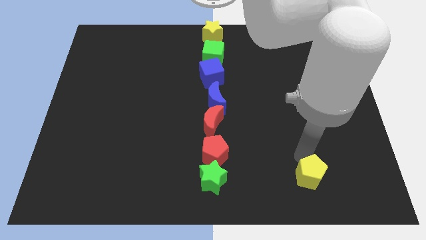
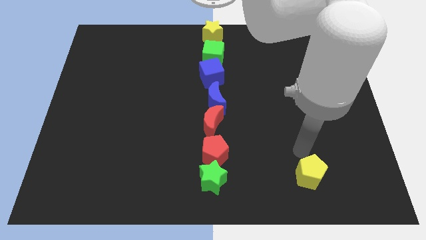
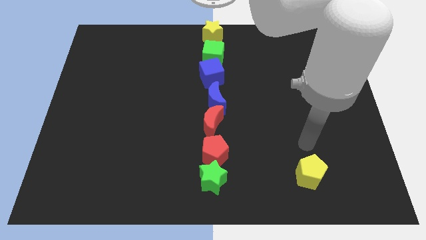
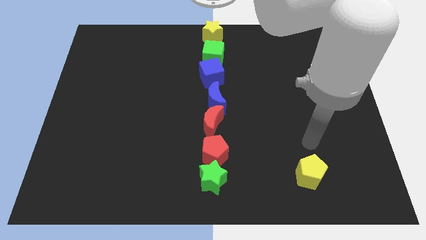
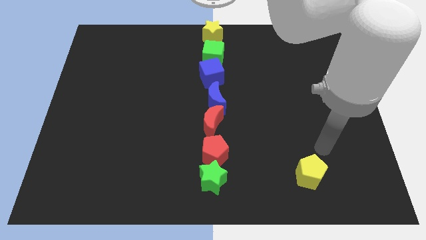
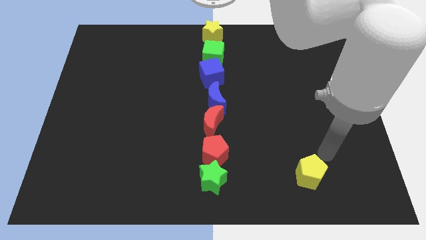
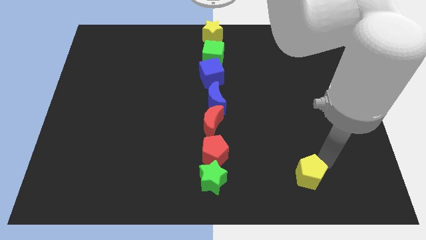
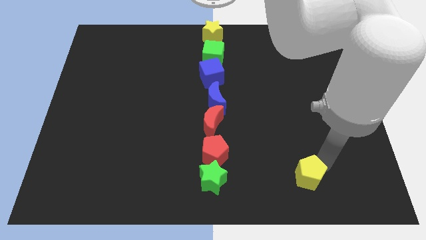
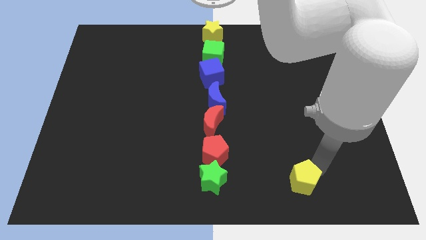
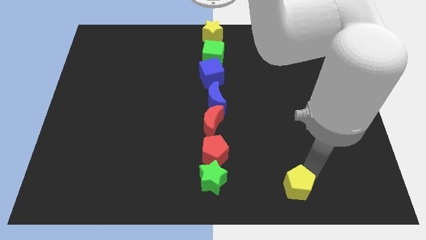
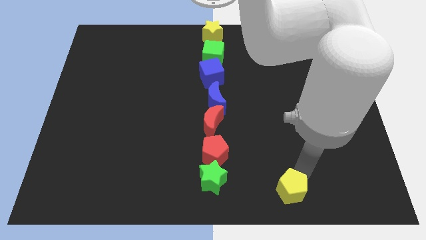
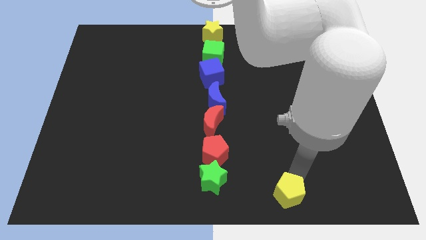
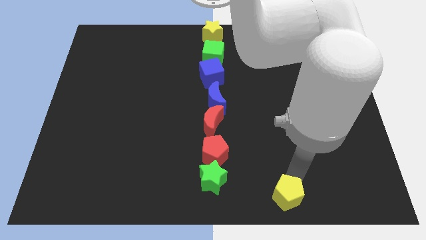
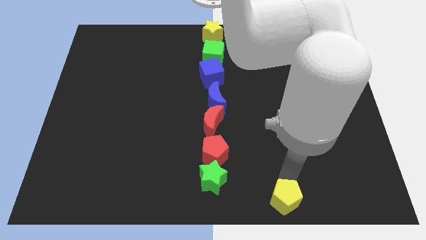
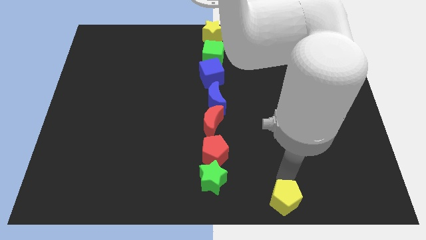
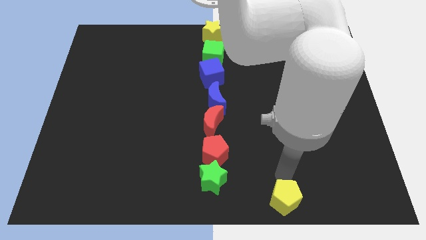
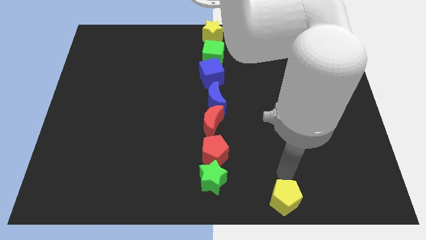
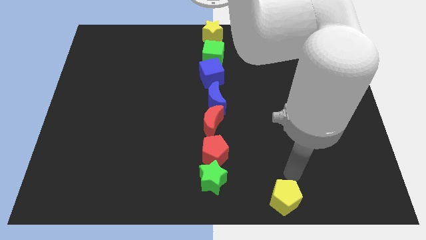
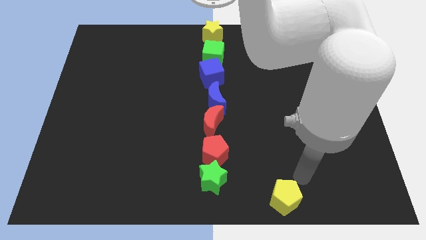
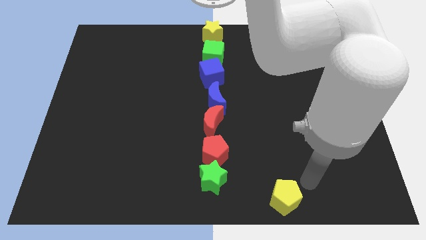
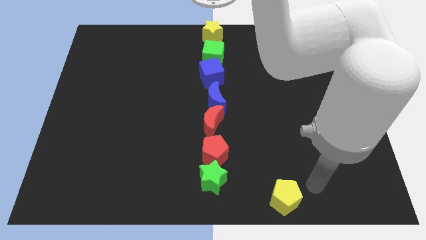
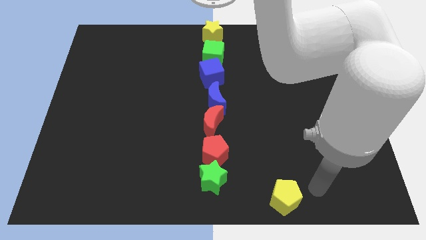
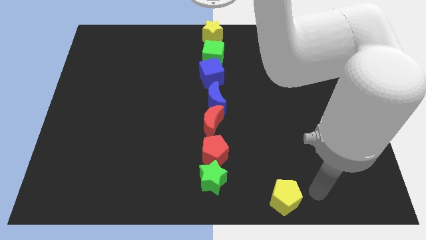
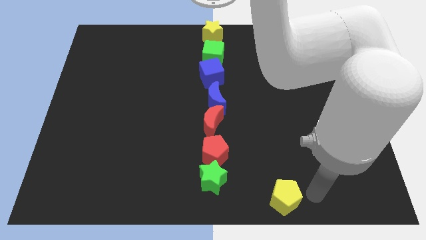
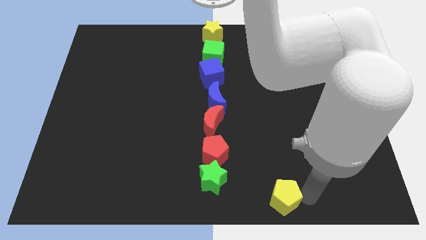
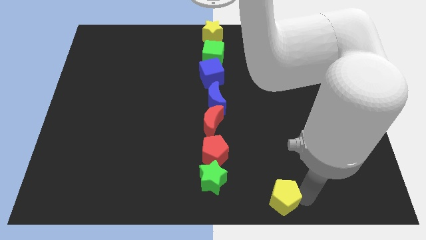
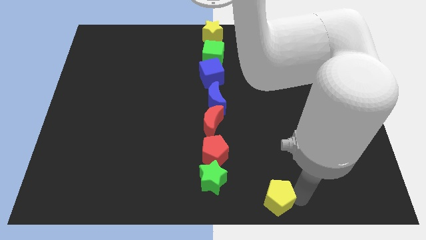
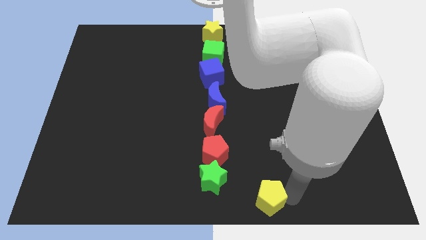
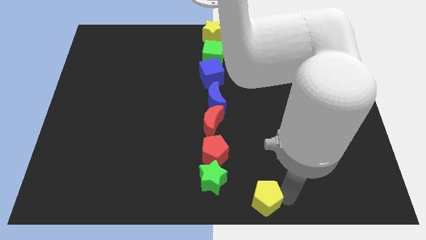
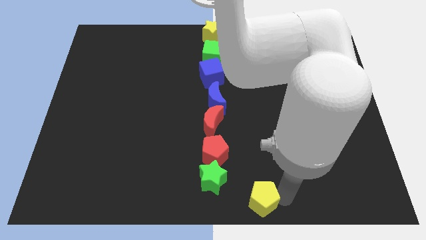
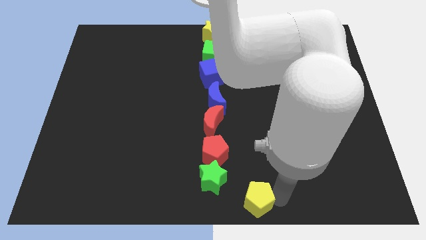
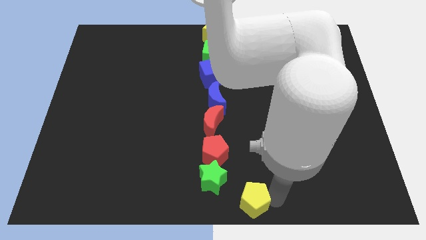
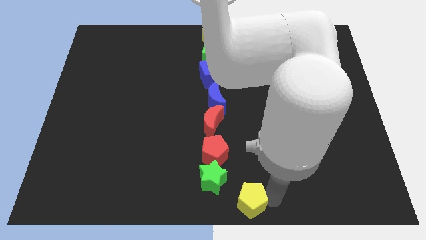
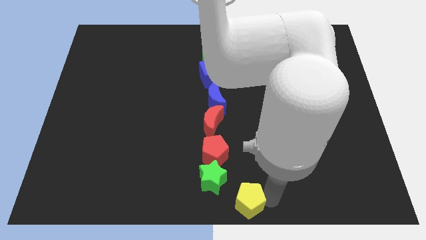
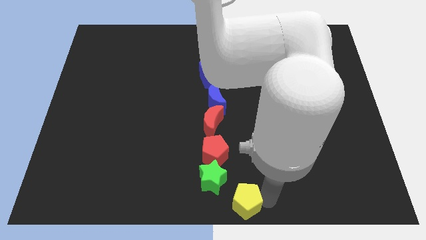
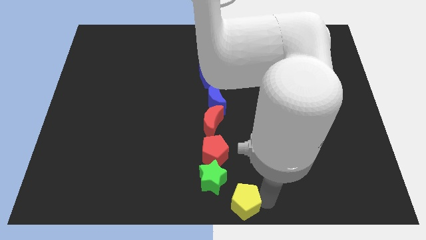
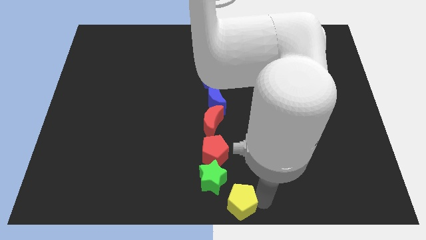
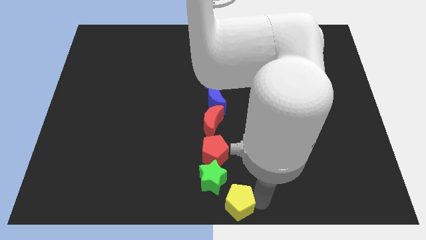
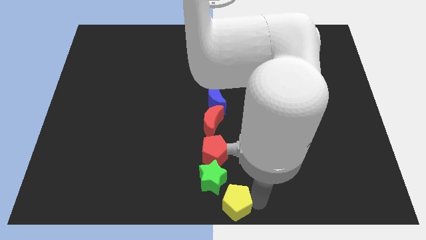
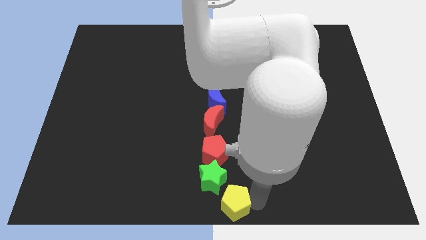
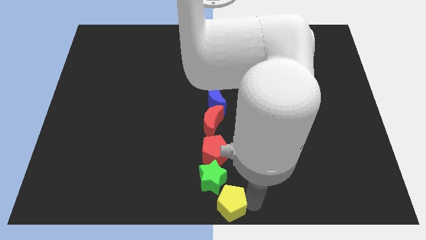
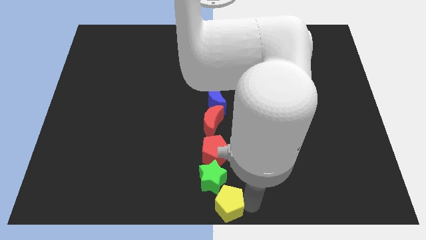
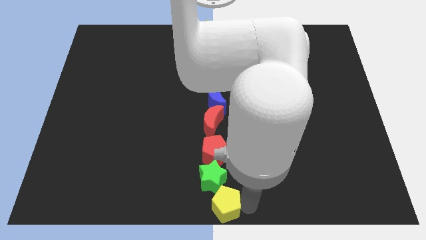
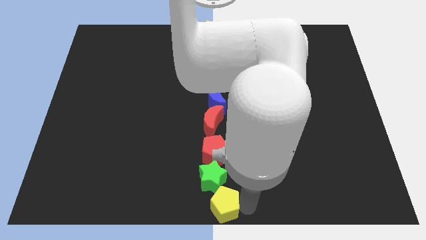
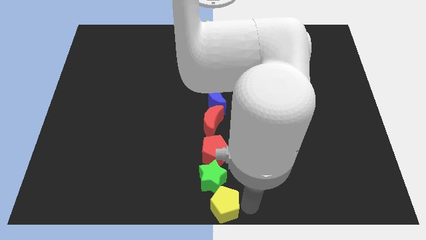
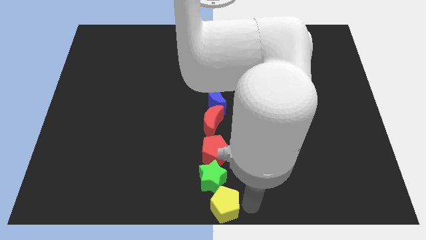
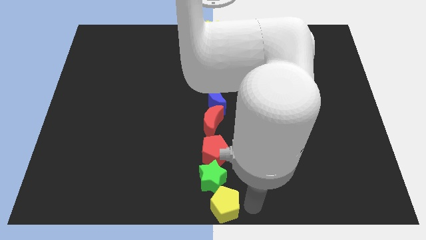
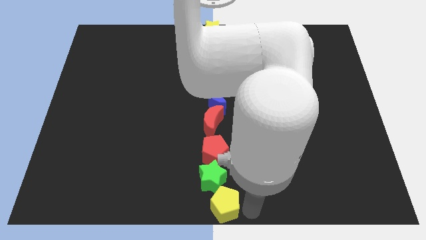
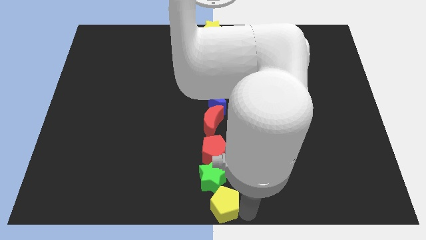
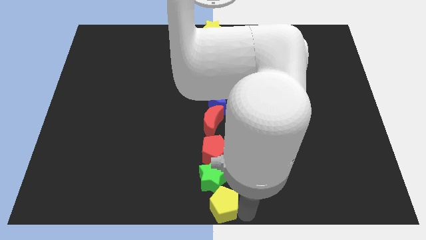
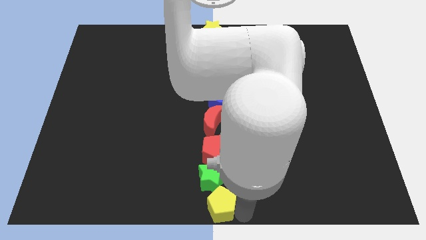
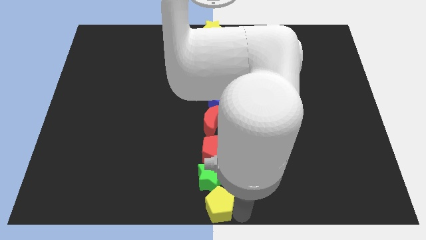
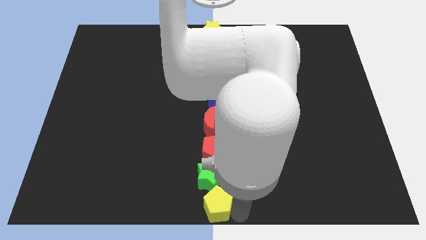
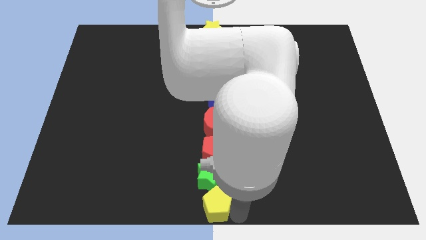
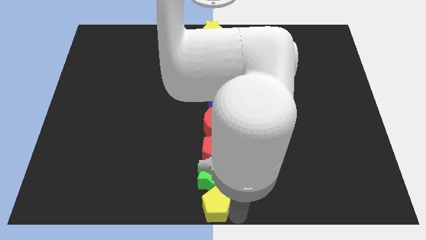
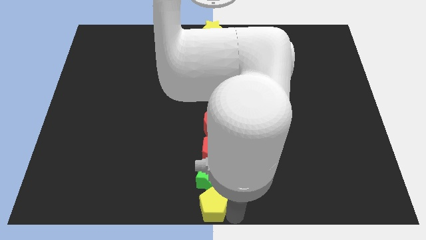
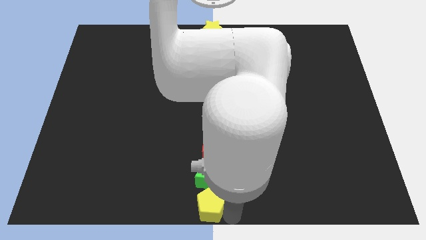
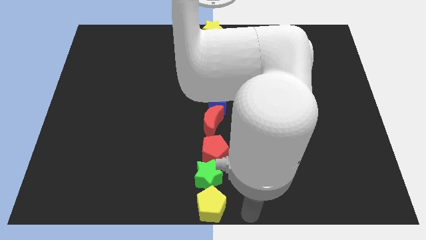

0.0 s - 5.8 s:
place yellow pentagon in a vertical line of other blocks

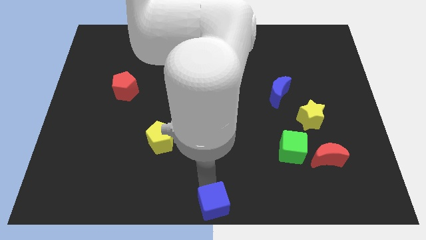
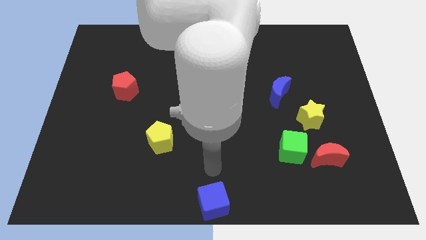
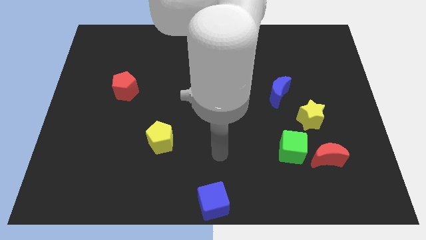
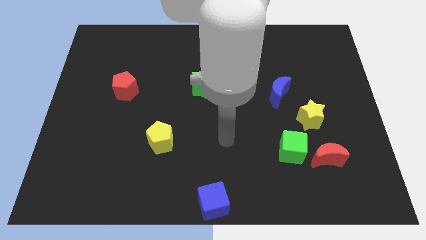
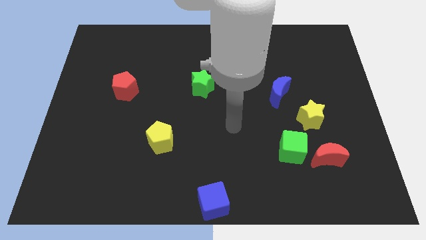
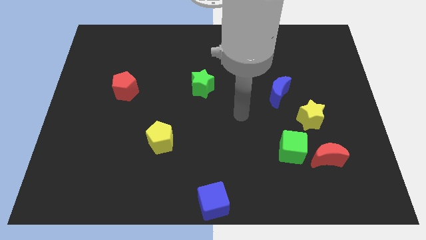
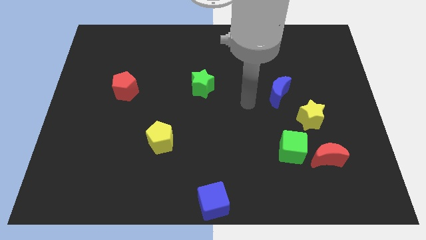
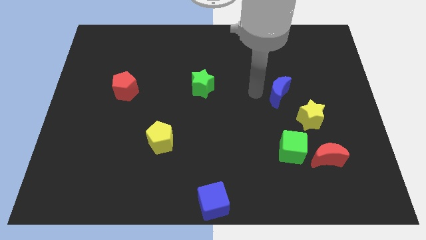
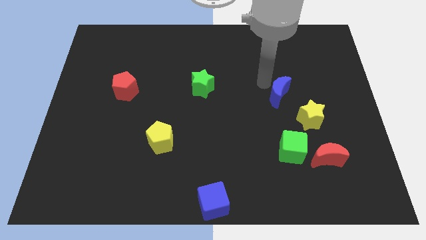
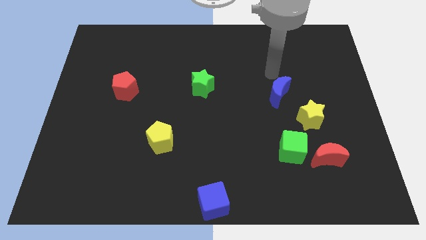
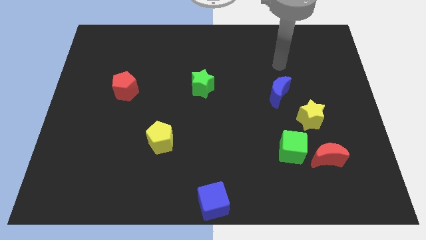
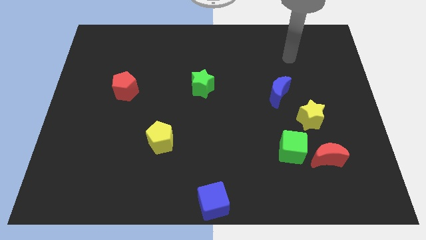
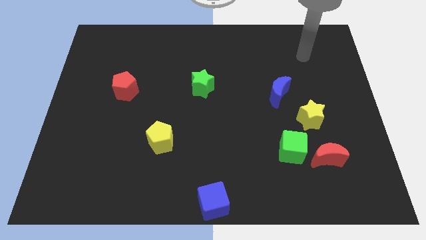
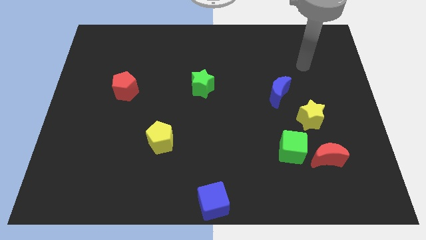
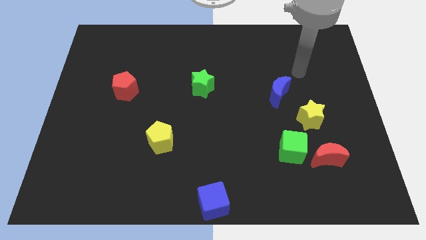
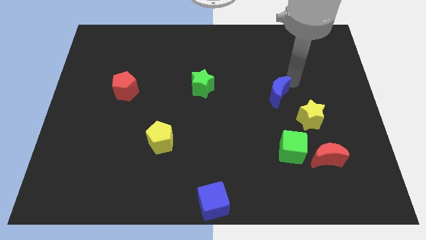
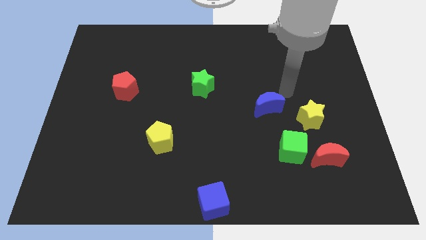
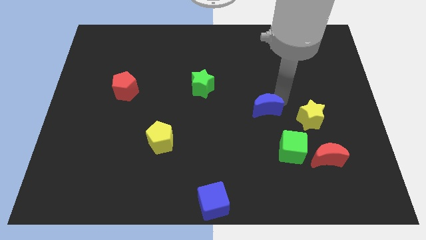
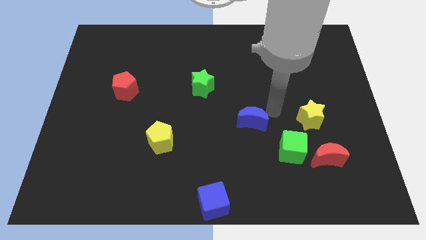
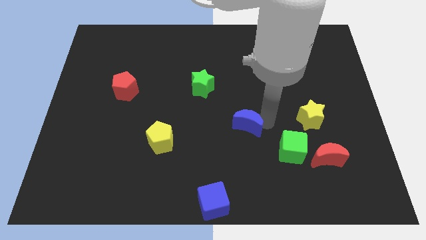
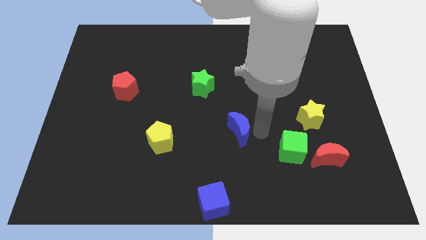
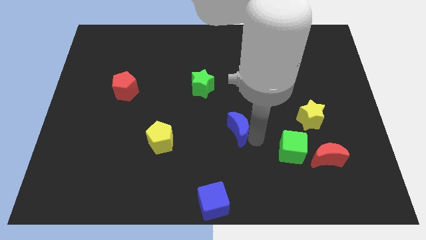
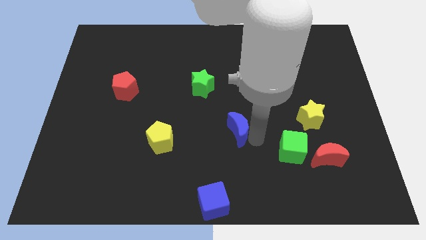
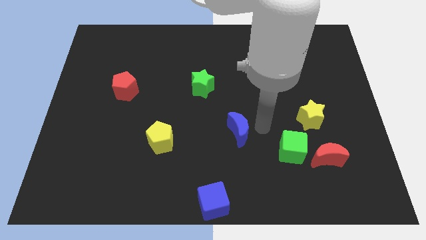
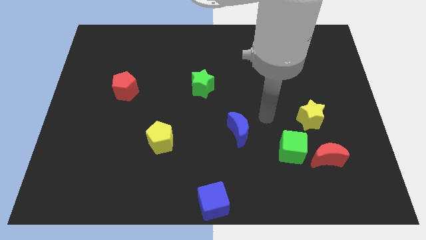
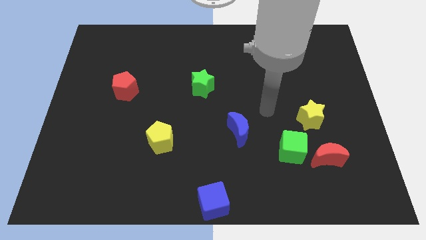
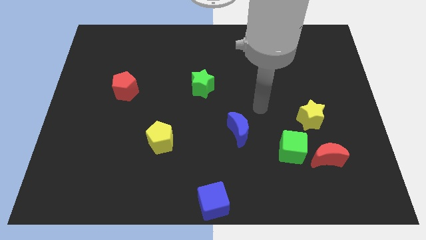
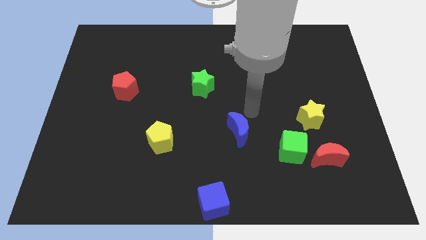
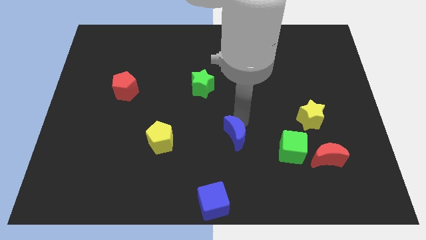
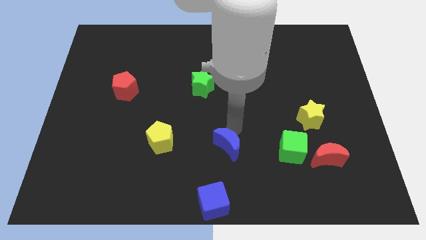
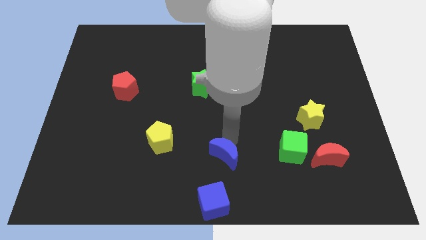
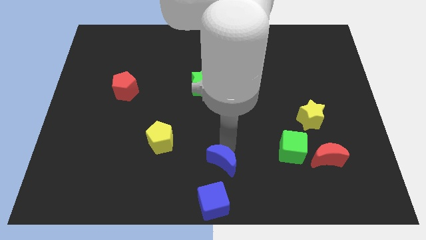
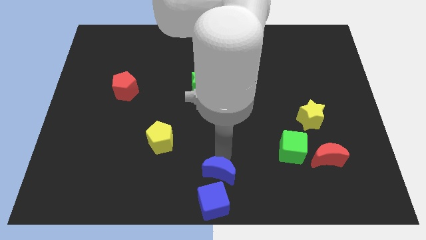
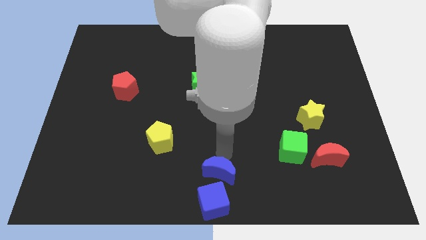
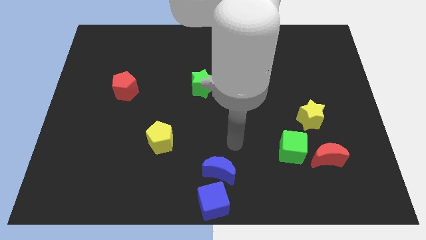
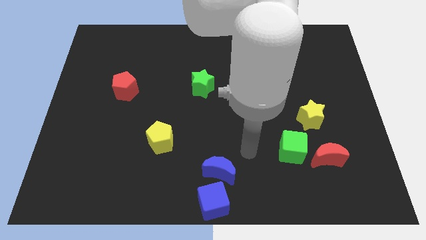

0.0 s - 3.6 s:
push the blue crescent on top of the blue cube
